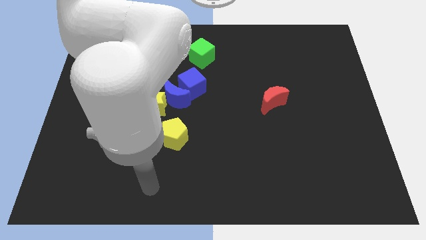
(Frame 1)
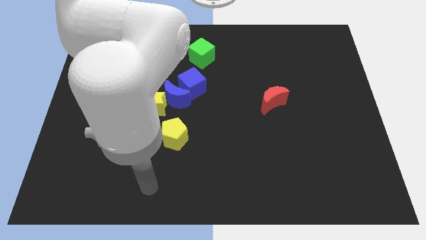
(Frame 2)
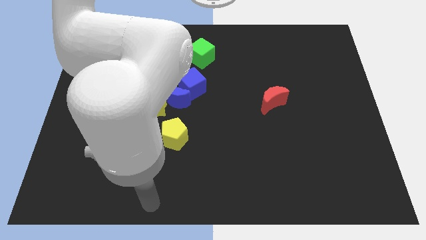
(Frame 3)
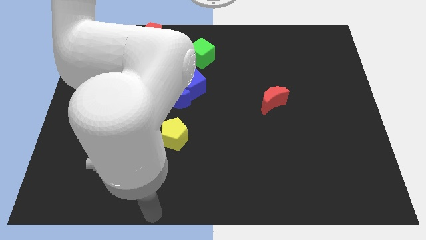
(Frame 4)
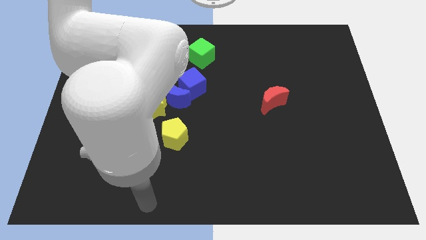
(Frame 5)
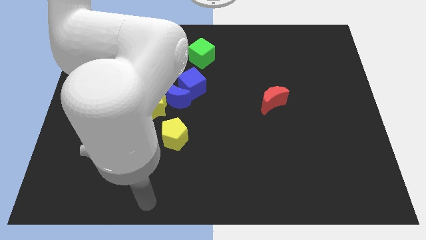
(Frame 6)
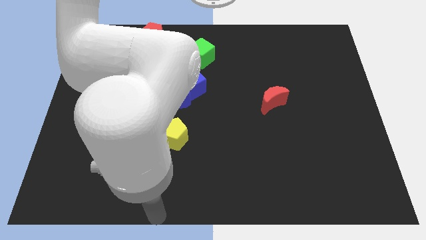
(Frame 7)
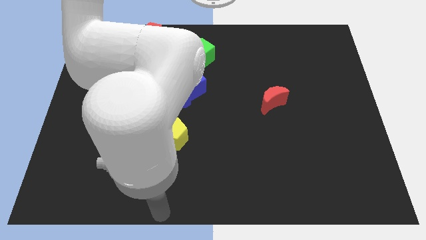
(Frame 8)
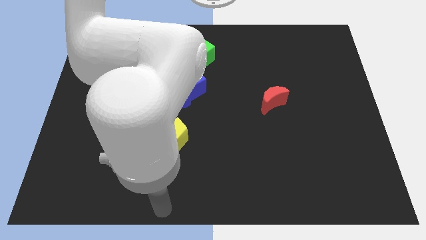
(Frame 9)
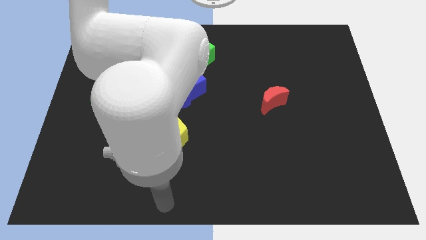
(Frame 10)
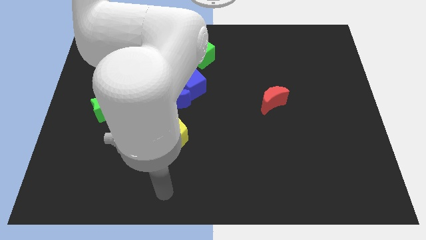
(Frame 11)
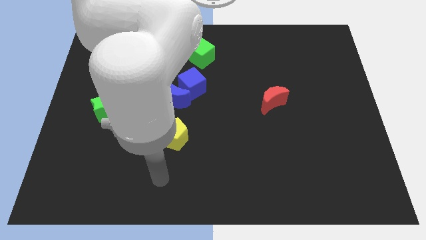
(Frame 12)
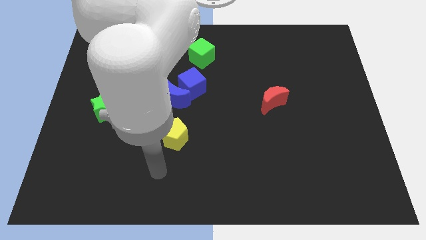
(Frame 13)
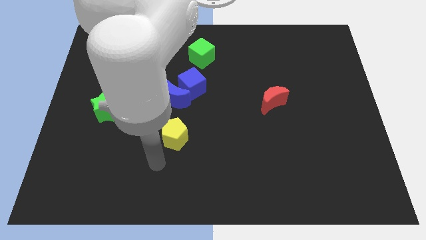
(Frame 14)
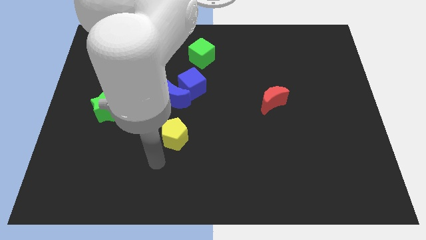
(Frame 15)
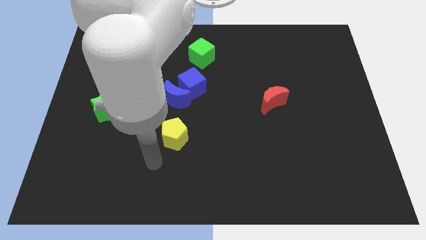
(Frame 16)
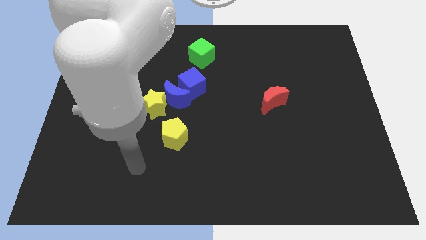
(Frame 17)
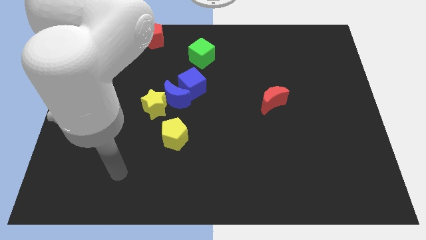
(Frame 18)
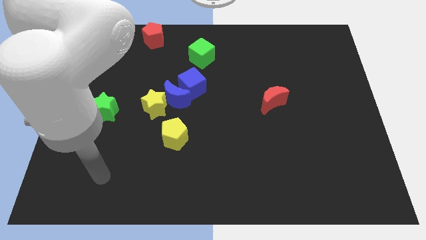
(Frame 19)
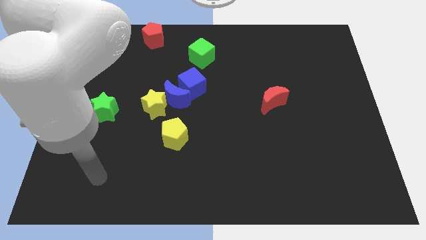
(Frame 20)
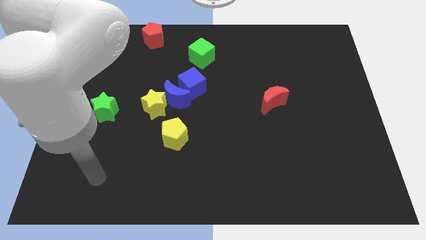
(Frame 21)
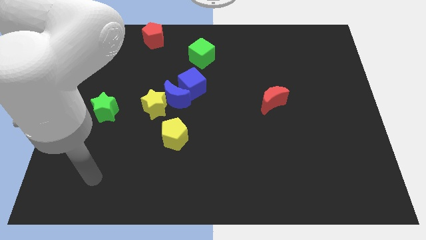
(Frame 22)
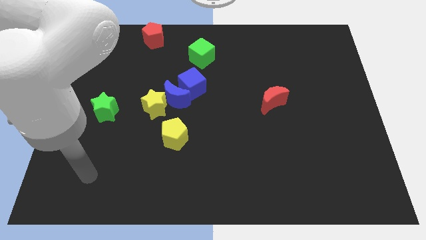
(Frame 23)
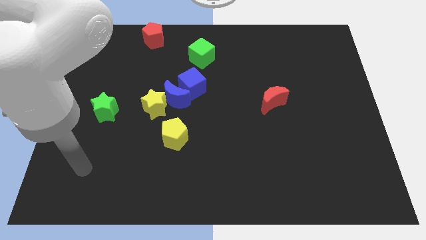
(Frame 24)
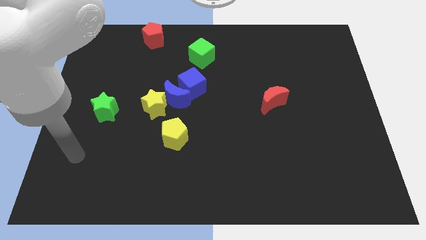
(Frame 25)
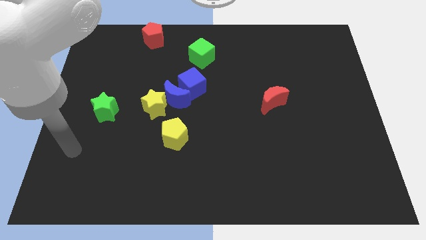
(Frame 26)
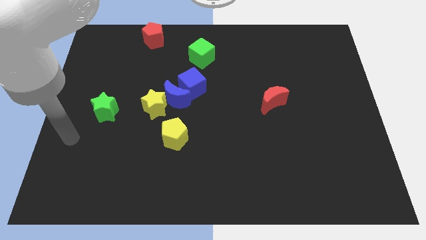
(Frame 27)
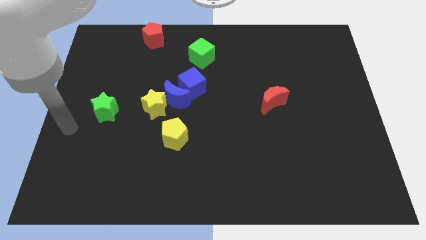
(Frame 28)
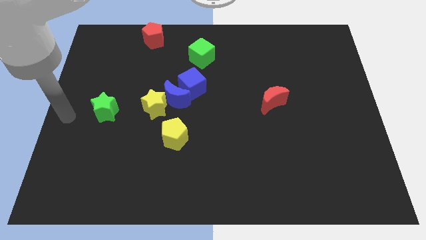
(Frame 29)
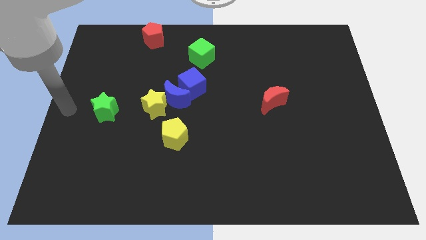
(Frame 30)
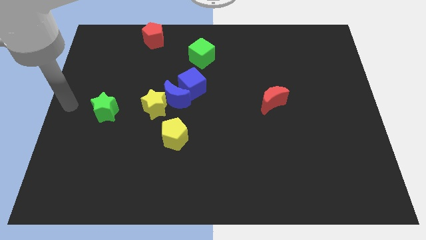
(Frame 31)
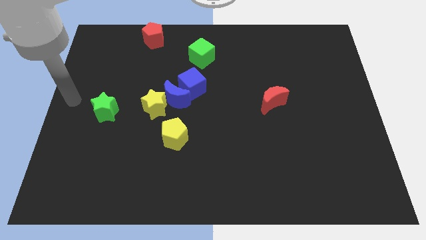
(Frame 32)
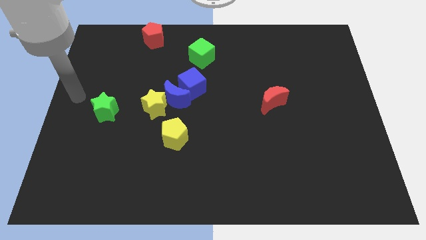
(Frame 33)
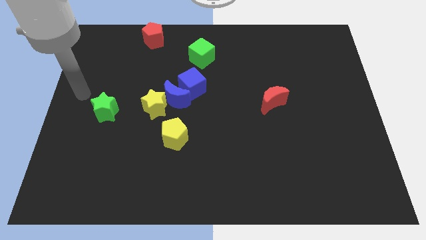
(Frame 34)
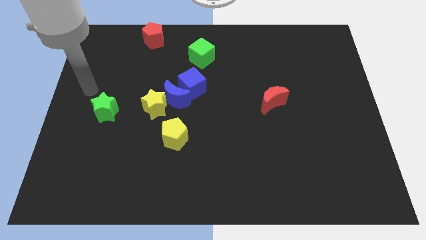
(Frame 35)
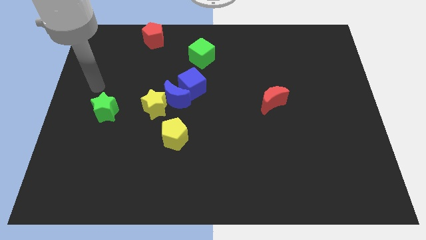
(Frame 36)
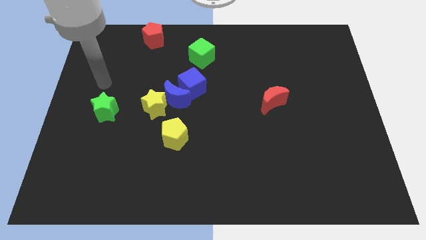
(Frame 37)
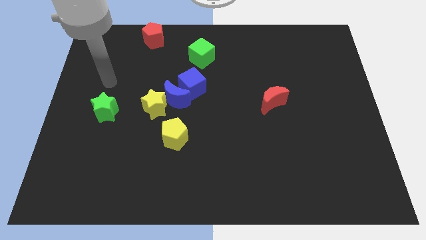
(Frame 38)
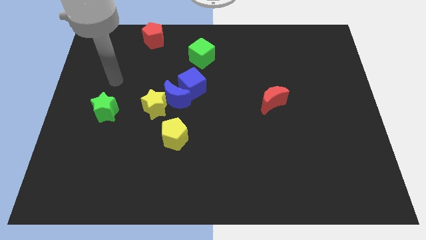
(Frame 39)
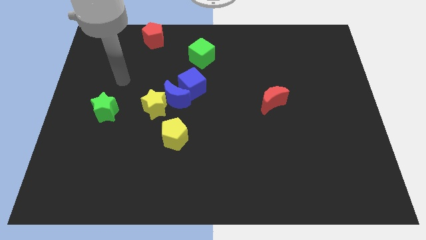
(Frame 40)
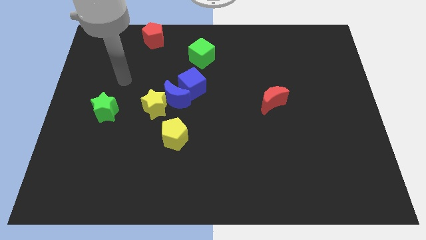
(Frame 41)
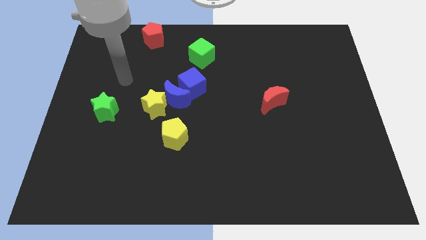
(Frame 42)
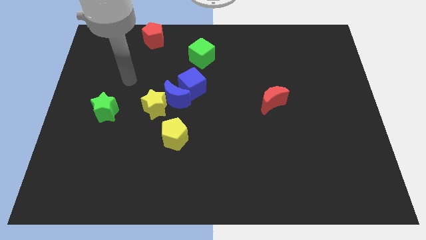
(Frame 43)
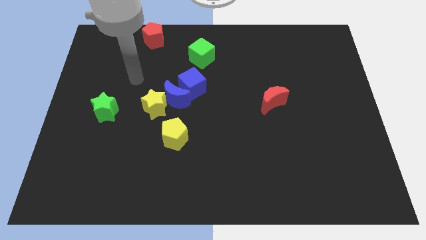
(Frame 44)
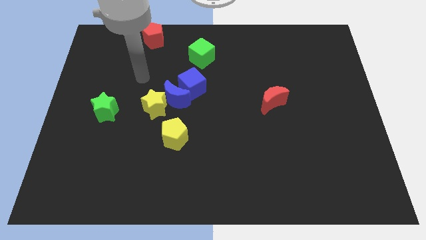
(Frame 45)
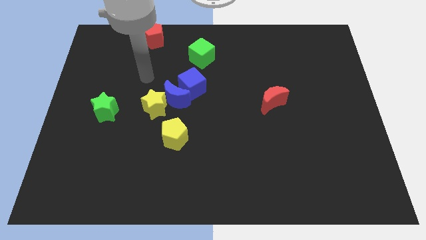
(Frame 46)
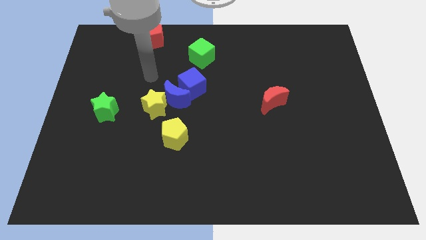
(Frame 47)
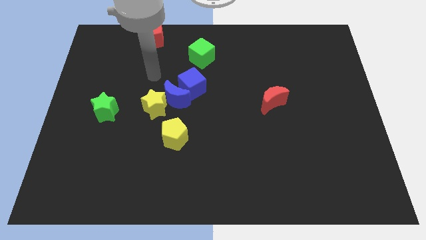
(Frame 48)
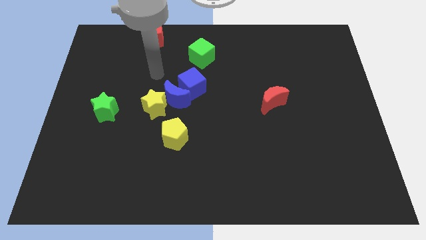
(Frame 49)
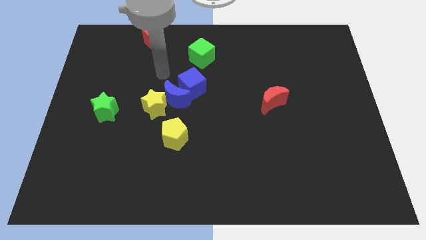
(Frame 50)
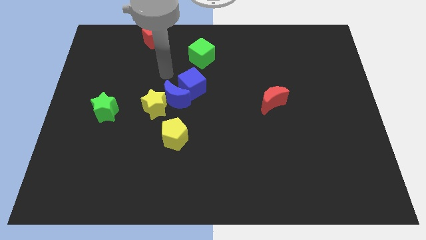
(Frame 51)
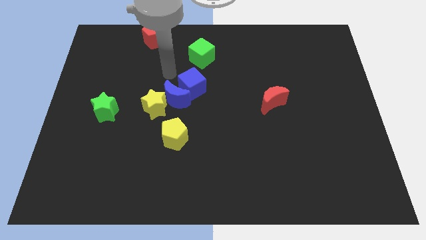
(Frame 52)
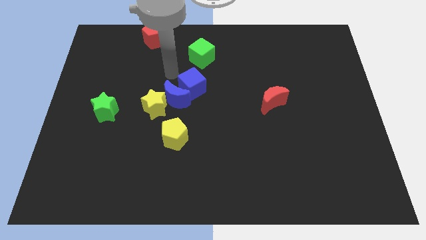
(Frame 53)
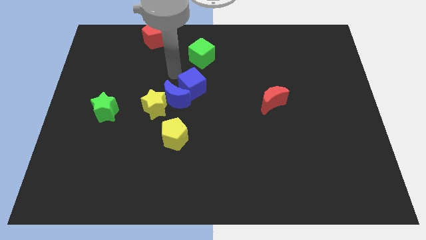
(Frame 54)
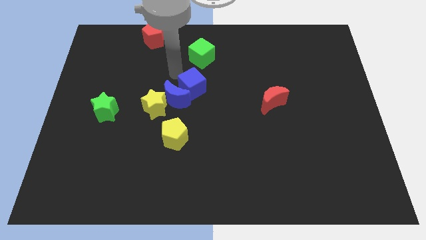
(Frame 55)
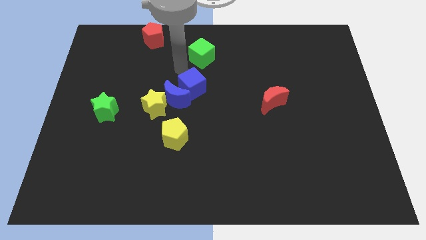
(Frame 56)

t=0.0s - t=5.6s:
move the arm to the blue cube

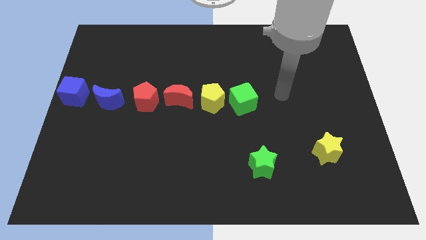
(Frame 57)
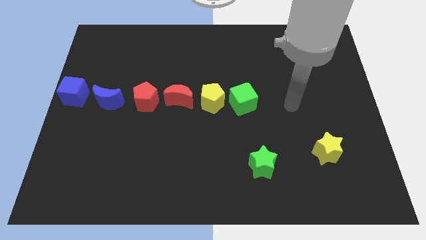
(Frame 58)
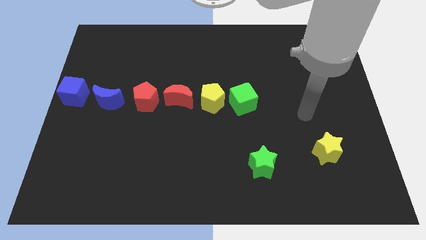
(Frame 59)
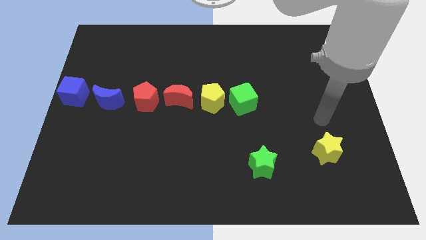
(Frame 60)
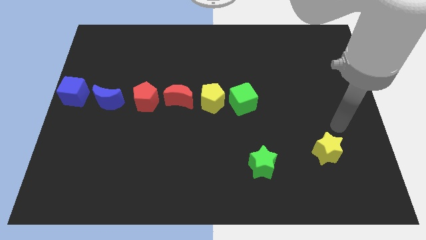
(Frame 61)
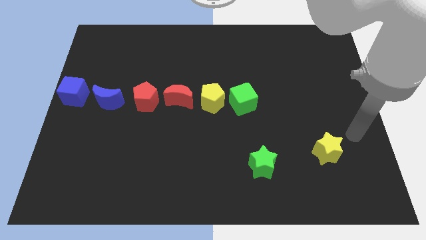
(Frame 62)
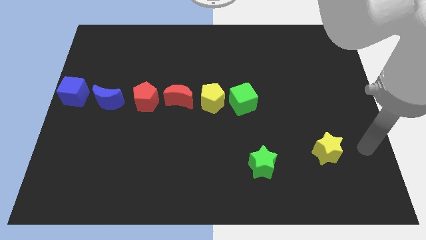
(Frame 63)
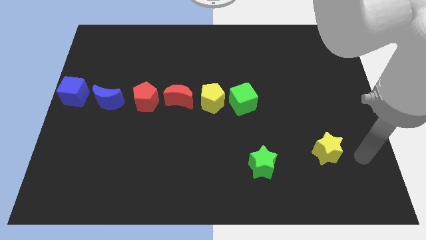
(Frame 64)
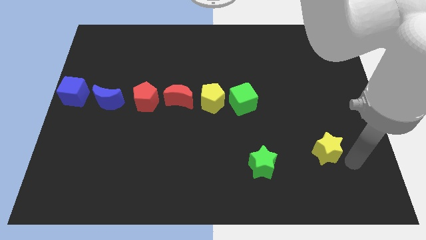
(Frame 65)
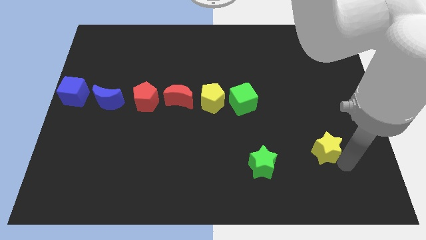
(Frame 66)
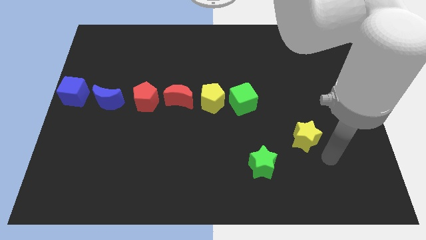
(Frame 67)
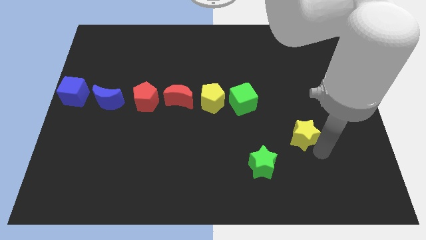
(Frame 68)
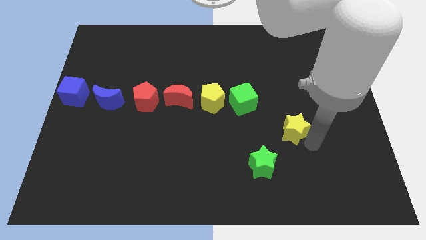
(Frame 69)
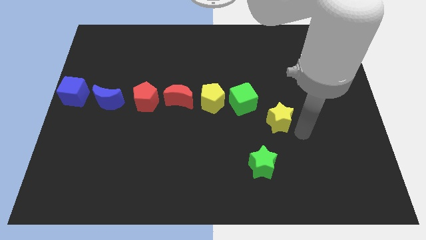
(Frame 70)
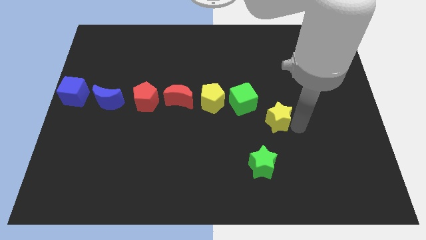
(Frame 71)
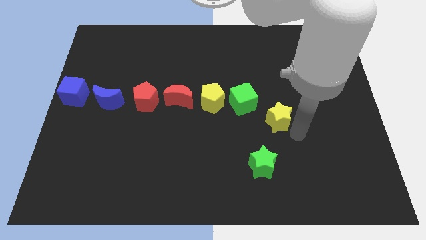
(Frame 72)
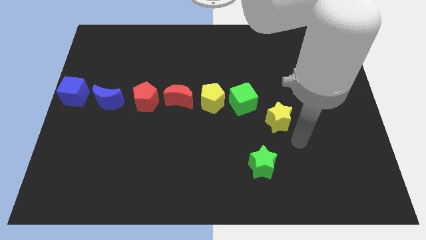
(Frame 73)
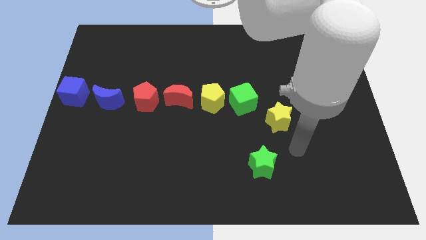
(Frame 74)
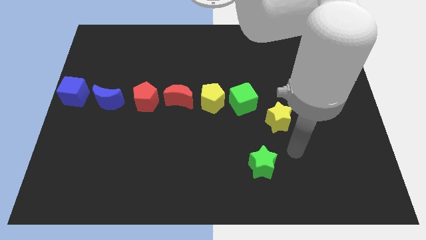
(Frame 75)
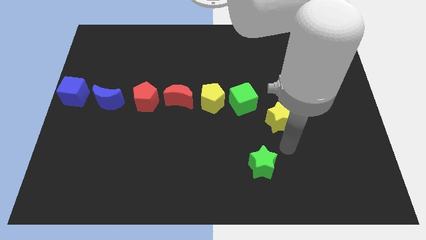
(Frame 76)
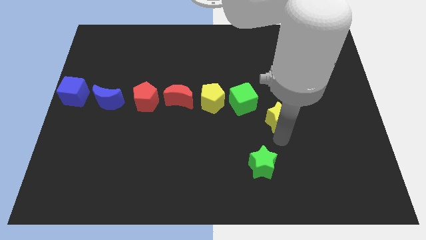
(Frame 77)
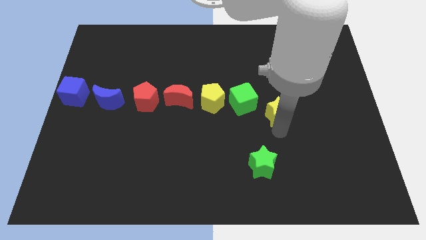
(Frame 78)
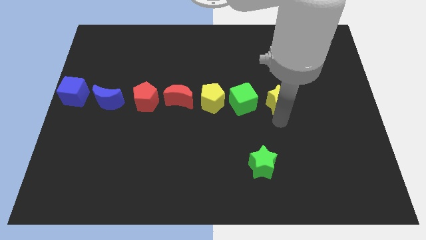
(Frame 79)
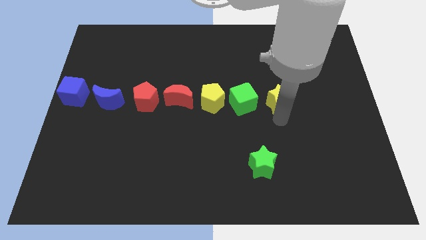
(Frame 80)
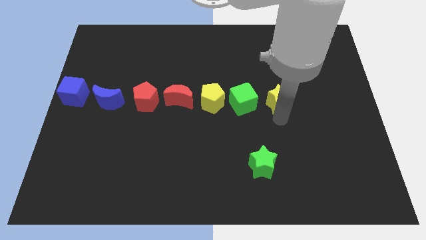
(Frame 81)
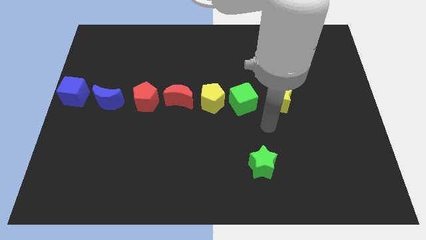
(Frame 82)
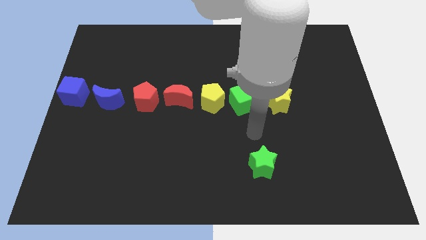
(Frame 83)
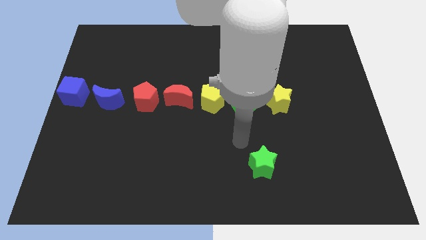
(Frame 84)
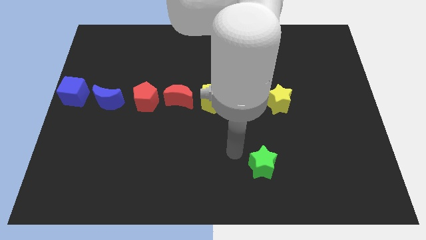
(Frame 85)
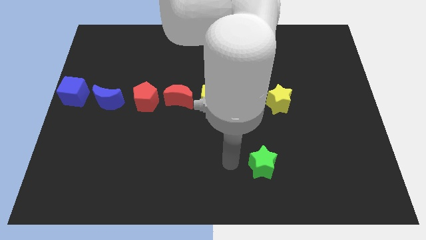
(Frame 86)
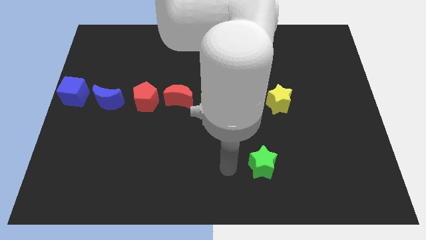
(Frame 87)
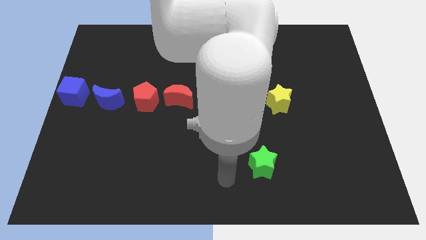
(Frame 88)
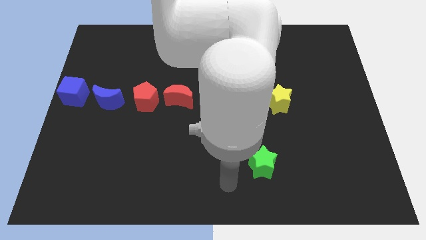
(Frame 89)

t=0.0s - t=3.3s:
push the yellow star to the right side of the green cube
